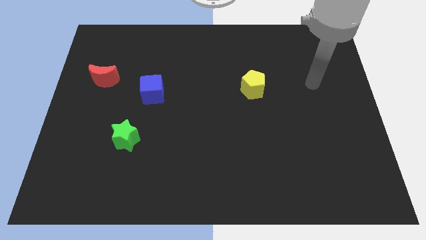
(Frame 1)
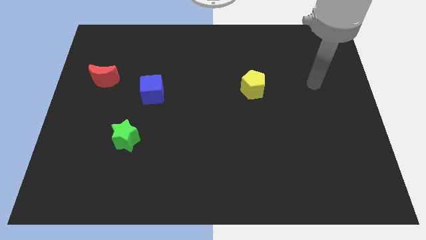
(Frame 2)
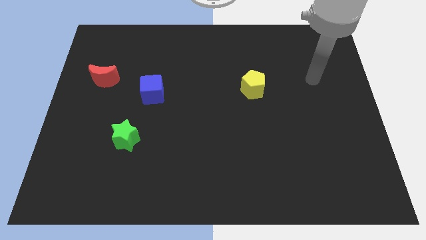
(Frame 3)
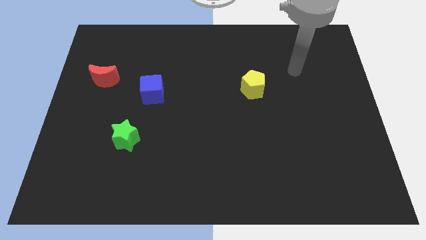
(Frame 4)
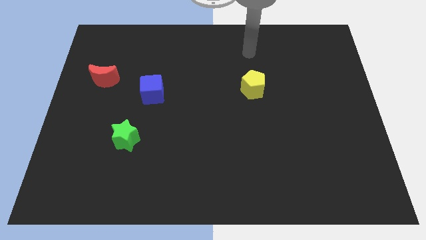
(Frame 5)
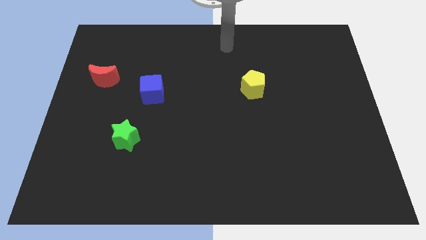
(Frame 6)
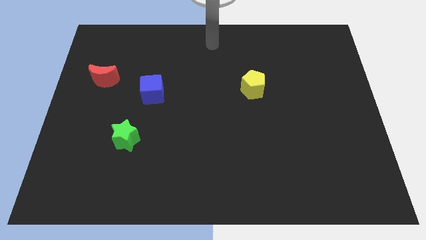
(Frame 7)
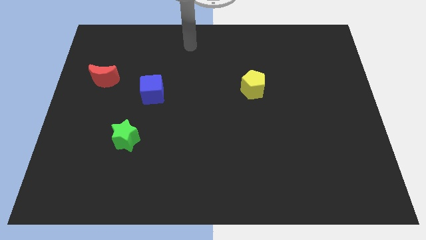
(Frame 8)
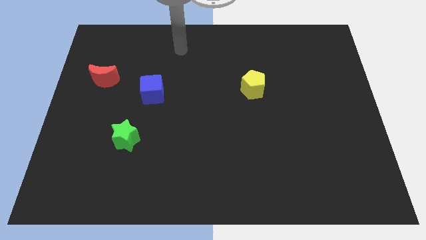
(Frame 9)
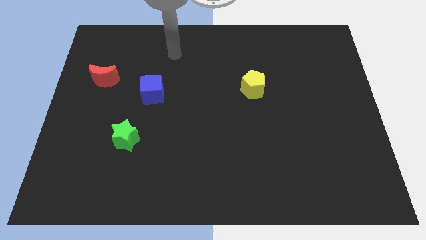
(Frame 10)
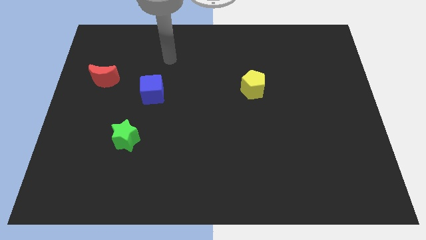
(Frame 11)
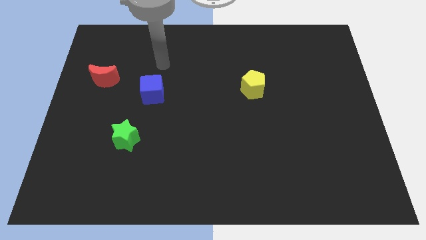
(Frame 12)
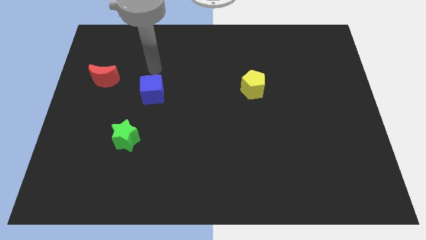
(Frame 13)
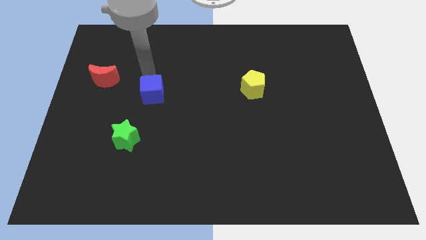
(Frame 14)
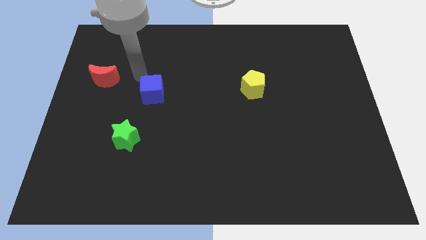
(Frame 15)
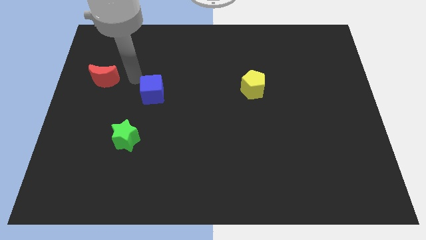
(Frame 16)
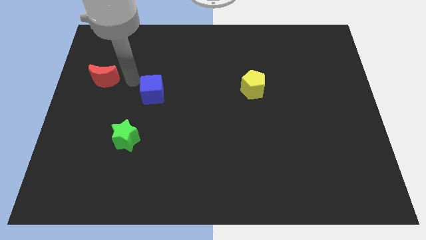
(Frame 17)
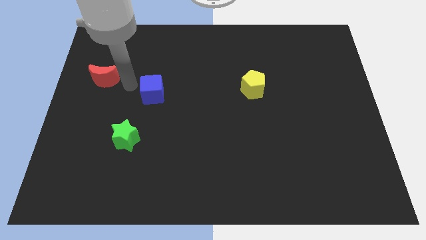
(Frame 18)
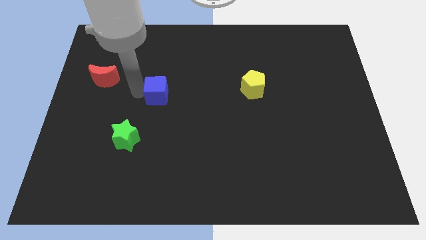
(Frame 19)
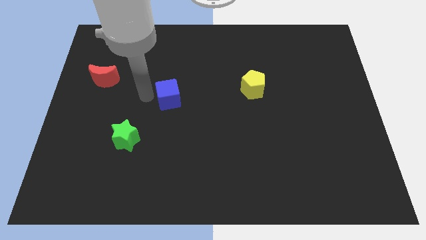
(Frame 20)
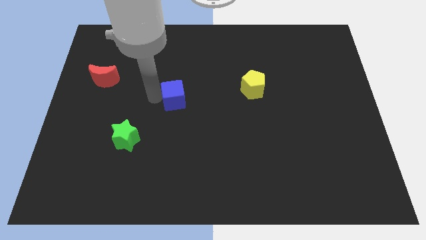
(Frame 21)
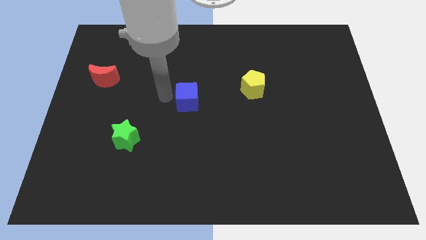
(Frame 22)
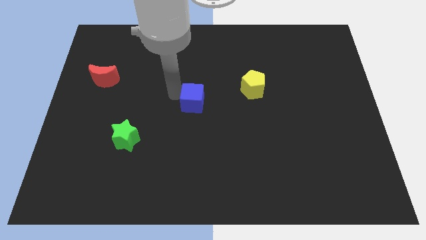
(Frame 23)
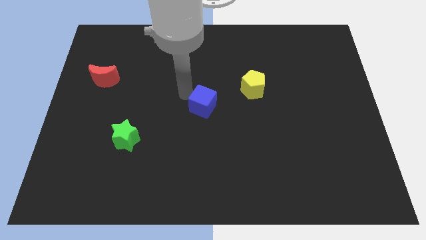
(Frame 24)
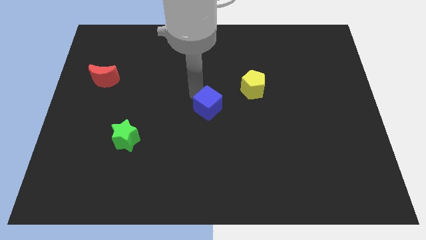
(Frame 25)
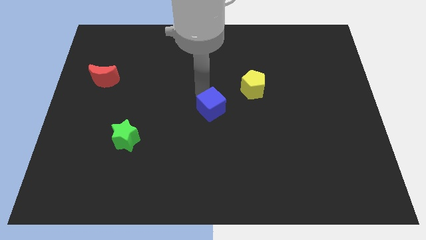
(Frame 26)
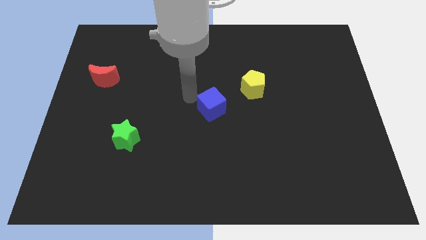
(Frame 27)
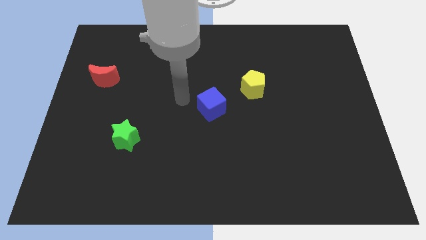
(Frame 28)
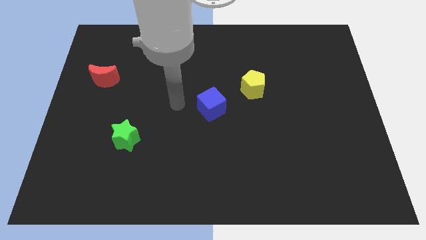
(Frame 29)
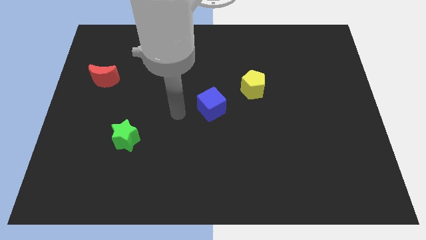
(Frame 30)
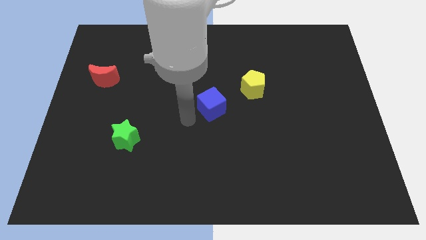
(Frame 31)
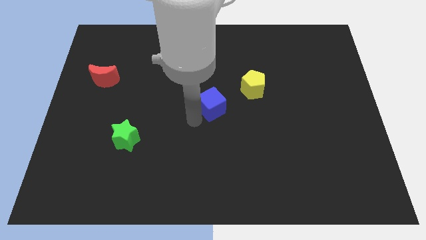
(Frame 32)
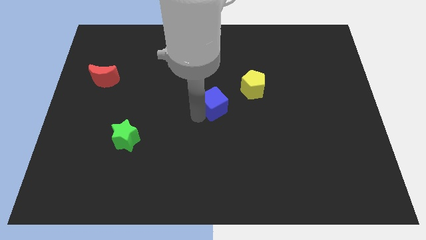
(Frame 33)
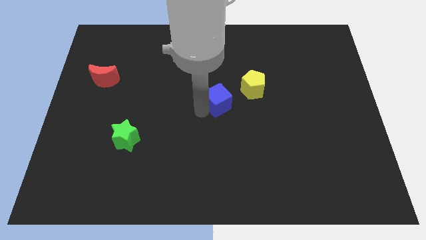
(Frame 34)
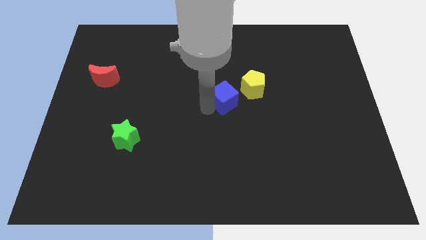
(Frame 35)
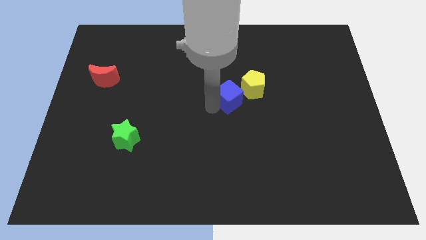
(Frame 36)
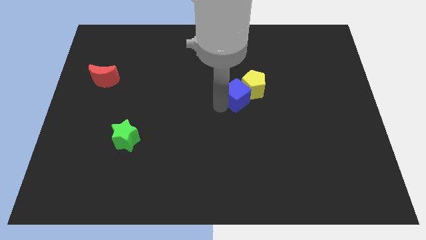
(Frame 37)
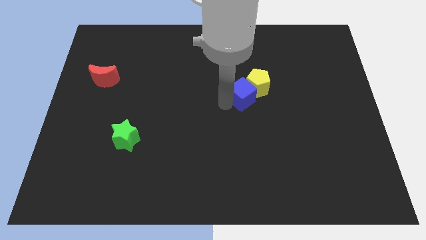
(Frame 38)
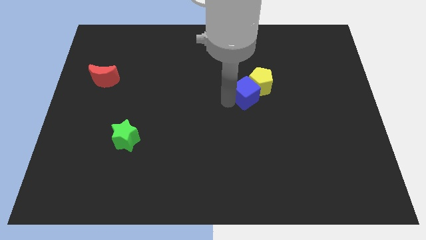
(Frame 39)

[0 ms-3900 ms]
put the blue cube next to the yellow block

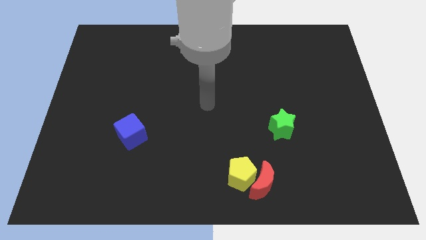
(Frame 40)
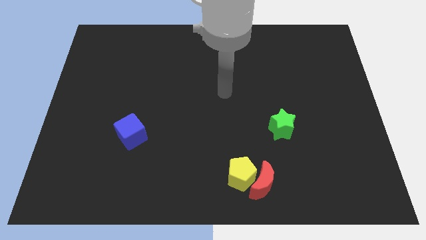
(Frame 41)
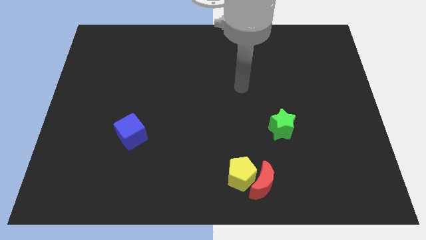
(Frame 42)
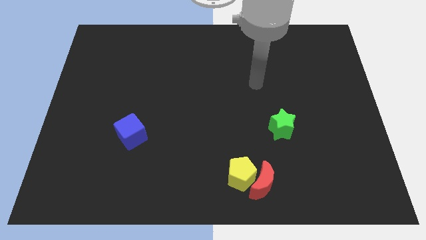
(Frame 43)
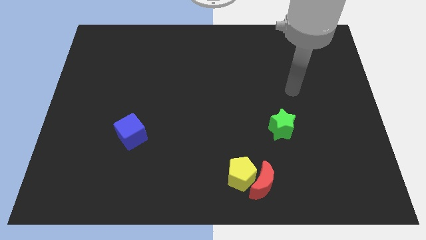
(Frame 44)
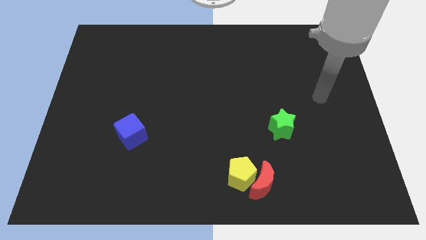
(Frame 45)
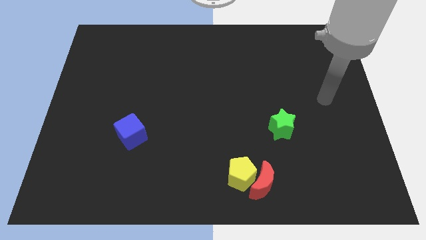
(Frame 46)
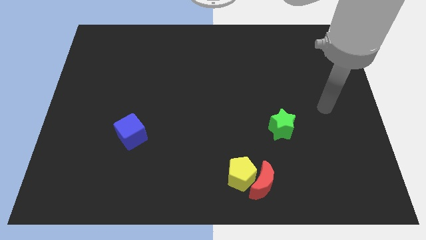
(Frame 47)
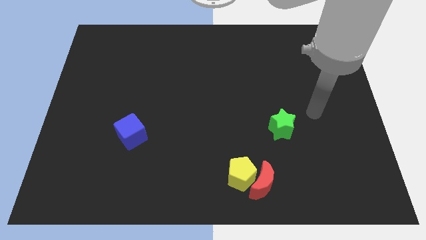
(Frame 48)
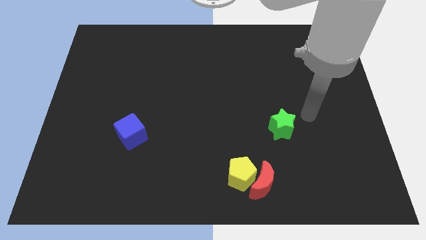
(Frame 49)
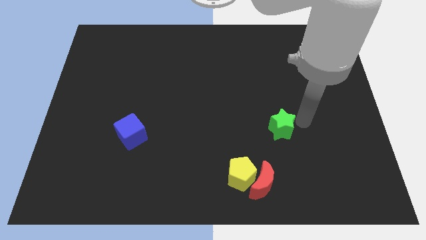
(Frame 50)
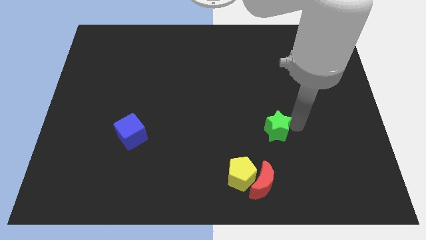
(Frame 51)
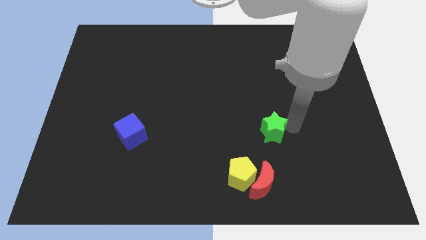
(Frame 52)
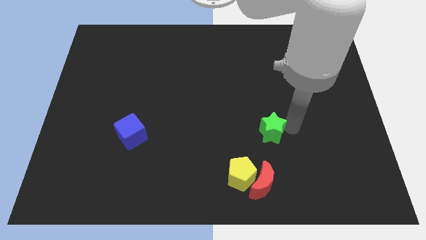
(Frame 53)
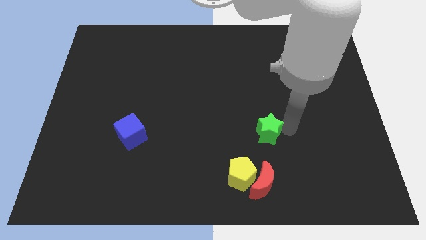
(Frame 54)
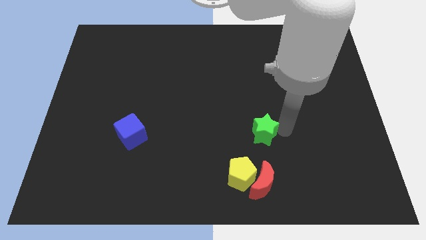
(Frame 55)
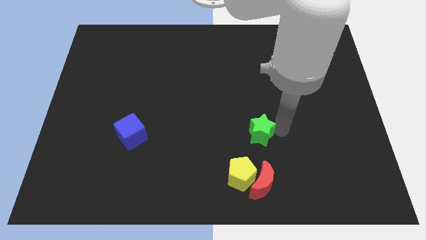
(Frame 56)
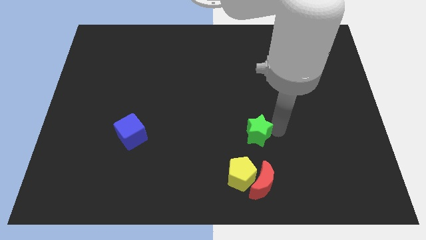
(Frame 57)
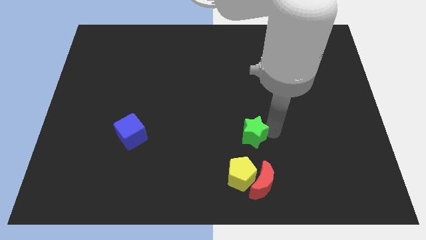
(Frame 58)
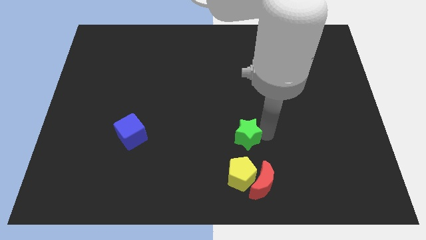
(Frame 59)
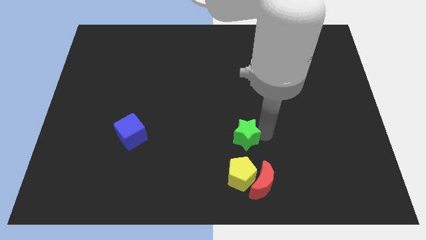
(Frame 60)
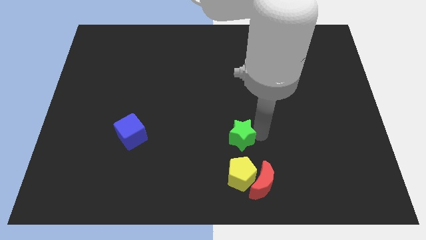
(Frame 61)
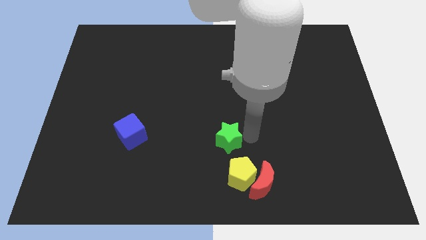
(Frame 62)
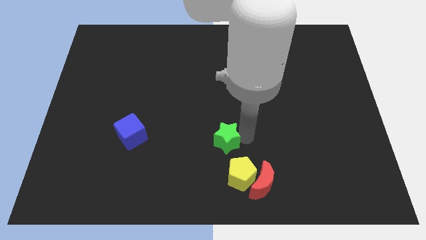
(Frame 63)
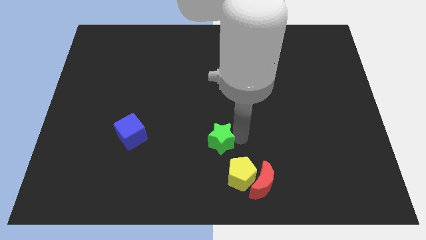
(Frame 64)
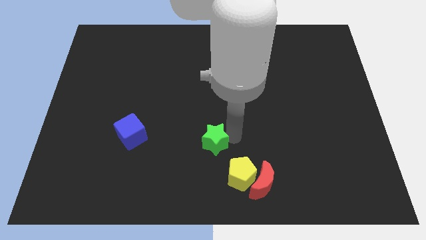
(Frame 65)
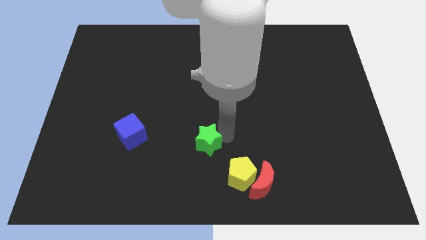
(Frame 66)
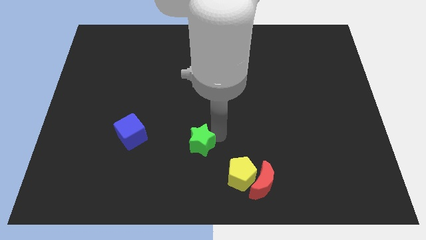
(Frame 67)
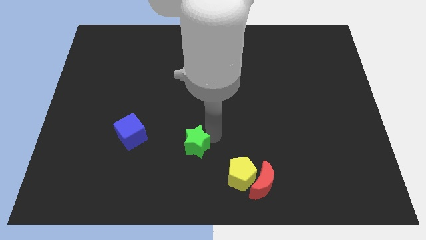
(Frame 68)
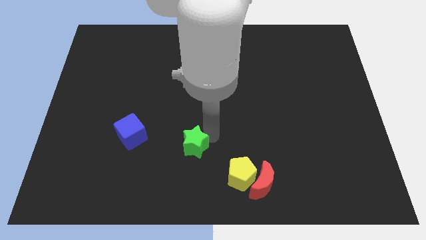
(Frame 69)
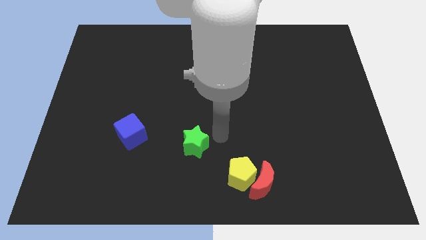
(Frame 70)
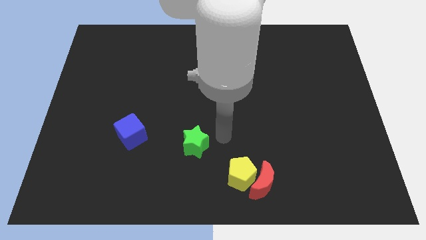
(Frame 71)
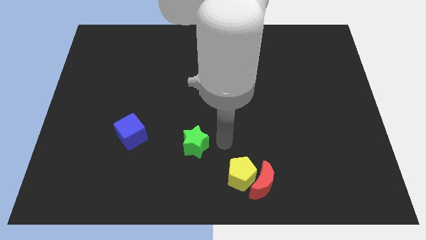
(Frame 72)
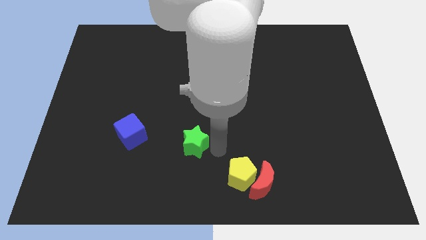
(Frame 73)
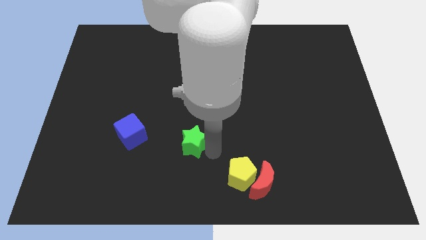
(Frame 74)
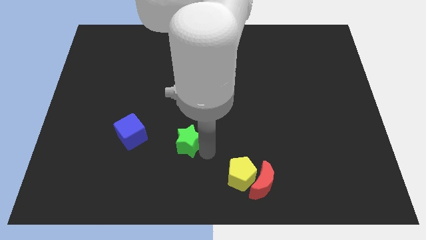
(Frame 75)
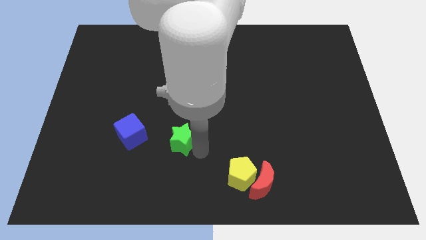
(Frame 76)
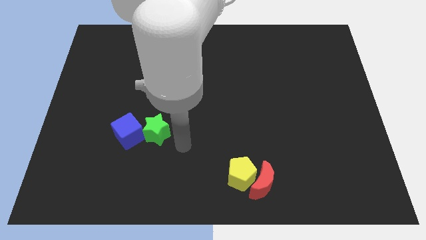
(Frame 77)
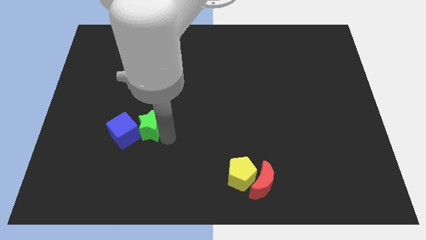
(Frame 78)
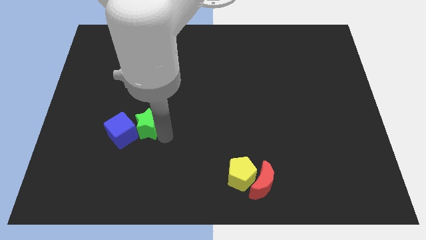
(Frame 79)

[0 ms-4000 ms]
move the green block next to the blue block

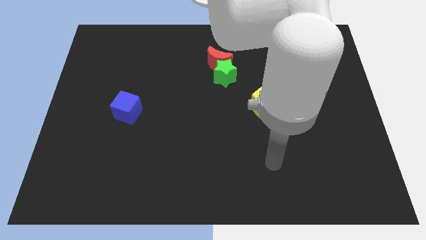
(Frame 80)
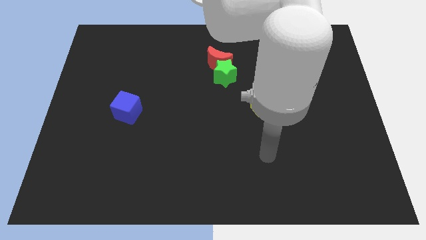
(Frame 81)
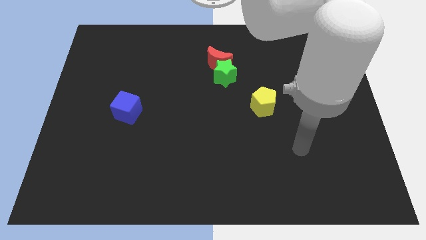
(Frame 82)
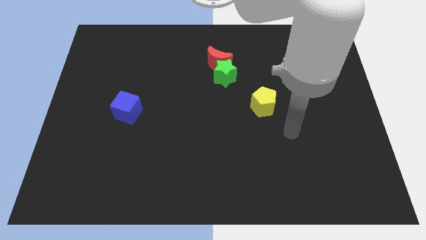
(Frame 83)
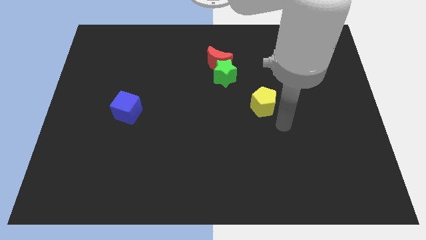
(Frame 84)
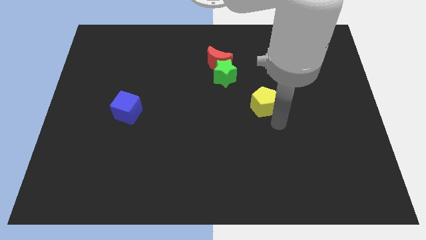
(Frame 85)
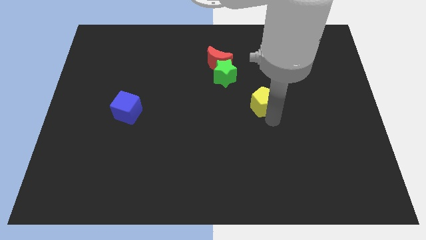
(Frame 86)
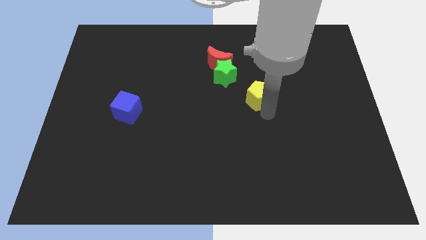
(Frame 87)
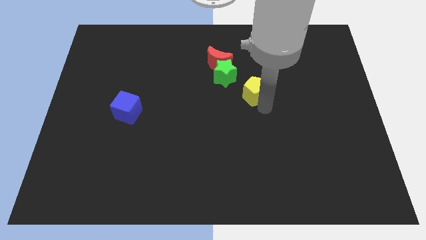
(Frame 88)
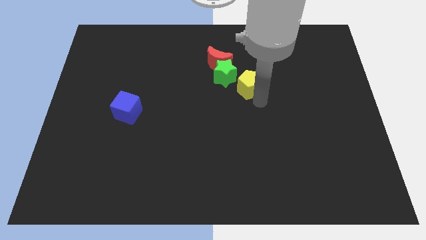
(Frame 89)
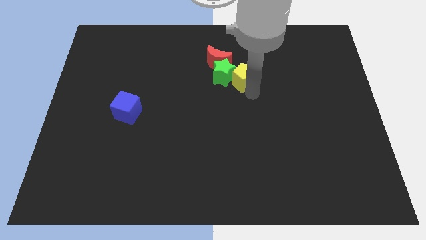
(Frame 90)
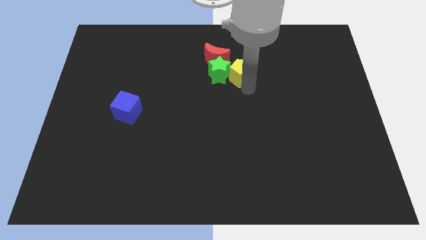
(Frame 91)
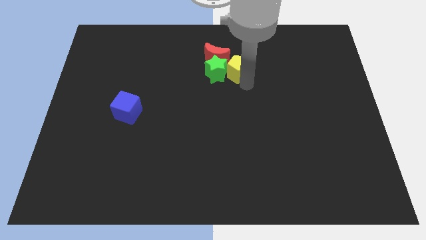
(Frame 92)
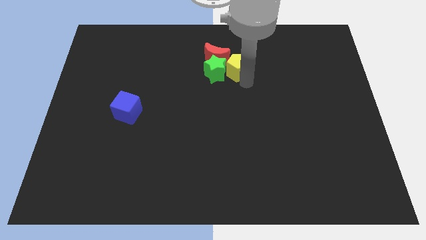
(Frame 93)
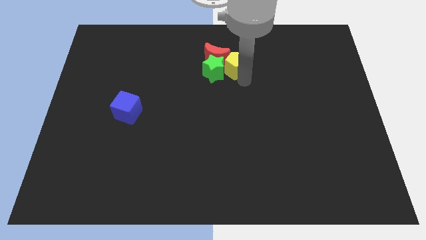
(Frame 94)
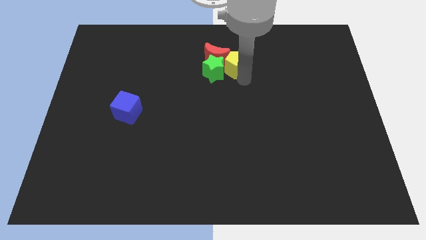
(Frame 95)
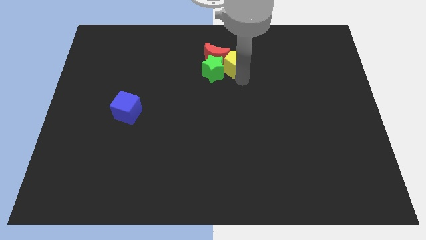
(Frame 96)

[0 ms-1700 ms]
put the yellow pentagon to the red moon
